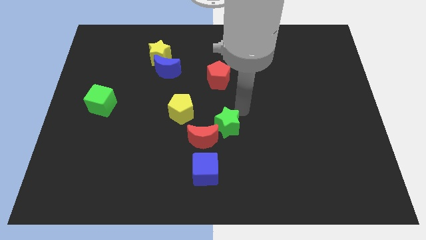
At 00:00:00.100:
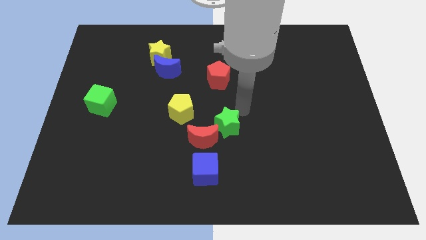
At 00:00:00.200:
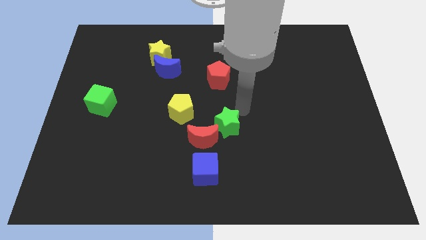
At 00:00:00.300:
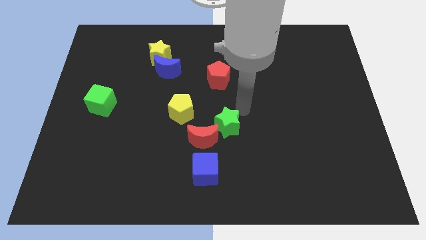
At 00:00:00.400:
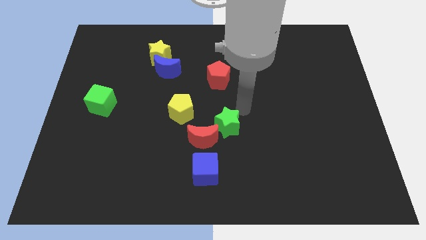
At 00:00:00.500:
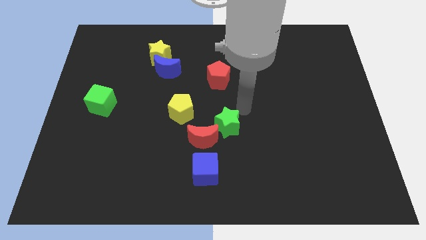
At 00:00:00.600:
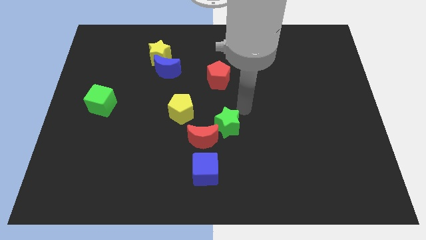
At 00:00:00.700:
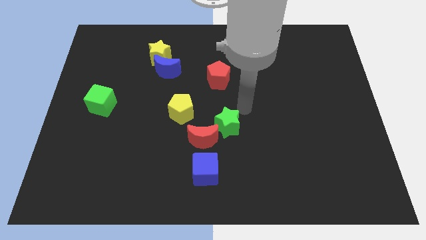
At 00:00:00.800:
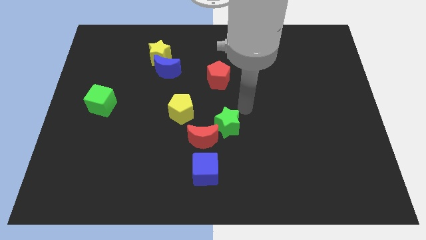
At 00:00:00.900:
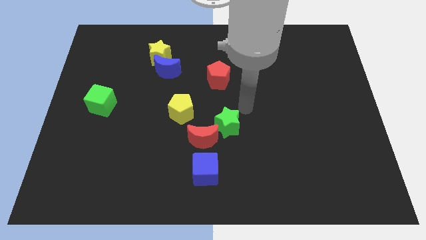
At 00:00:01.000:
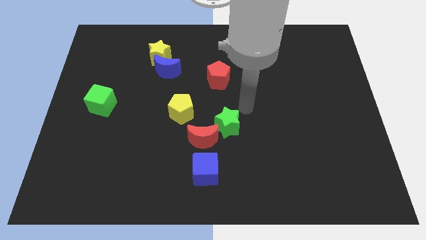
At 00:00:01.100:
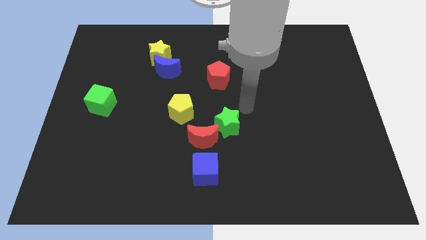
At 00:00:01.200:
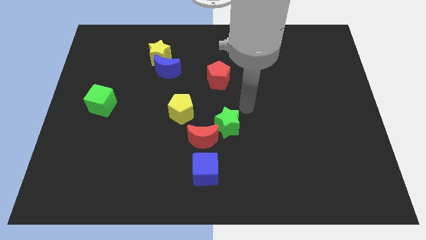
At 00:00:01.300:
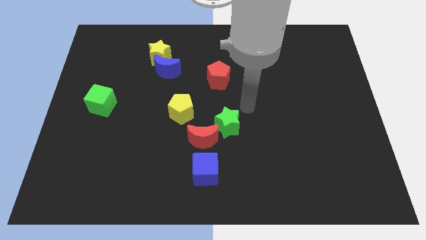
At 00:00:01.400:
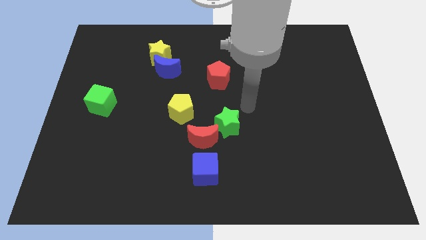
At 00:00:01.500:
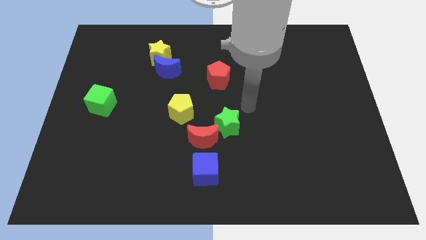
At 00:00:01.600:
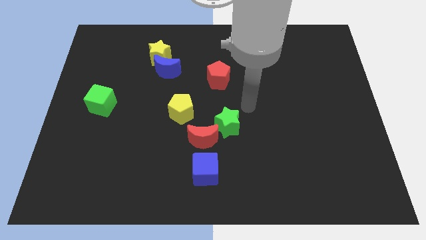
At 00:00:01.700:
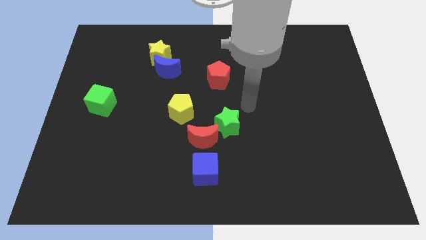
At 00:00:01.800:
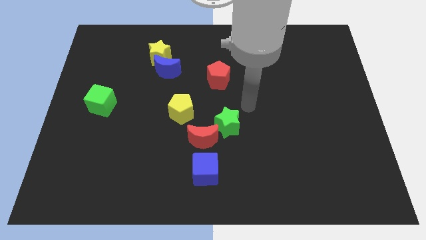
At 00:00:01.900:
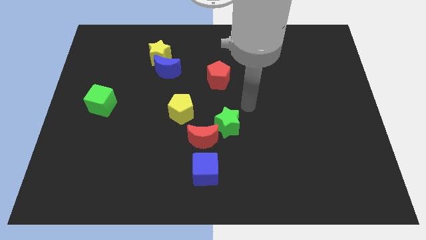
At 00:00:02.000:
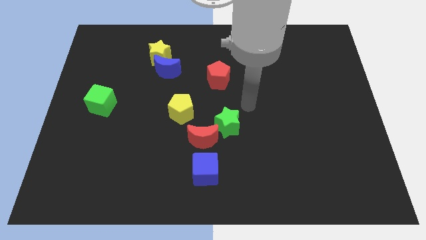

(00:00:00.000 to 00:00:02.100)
move your arm towards diagonal right of green star

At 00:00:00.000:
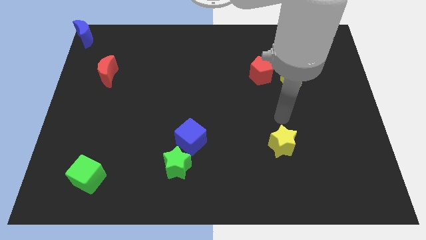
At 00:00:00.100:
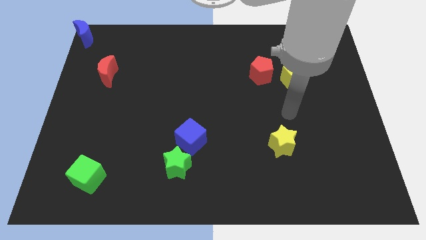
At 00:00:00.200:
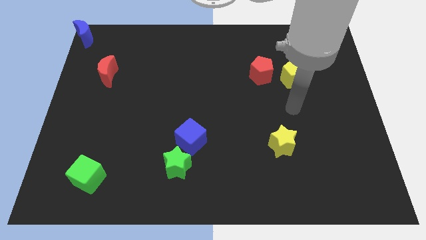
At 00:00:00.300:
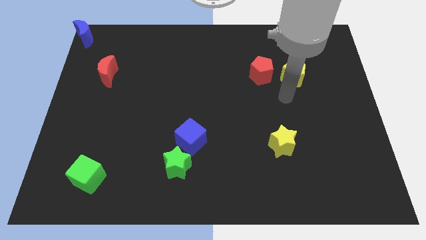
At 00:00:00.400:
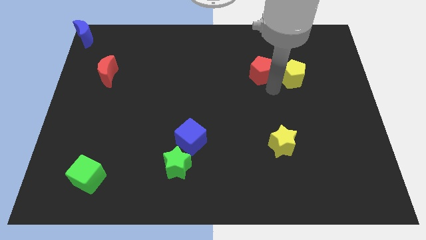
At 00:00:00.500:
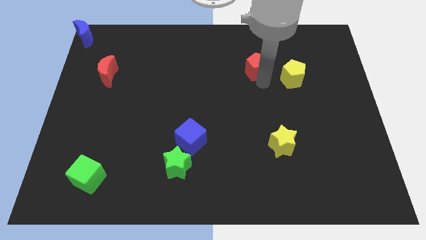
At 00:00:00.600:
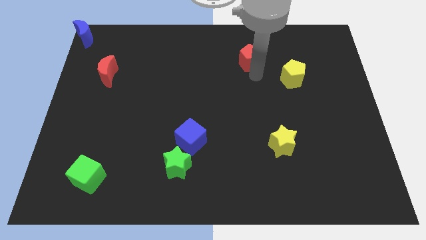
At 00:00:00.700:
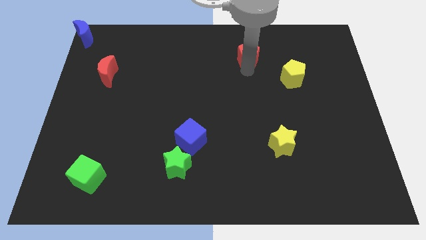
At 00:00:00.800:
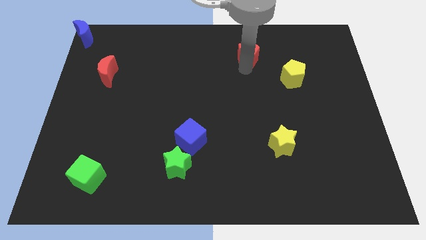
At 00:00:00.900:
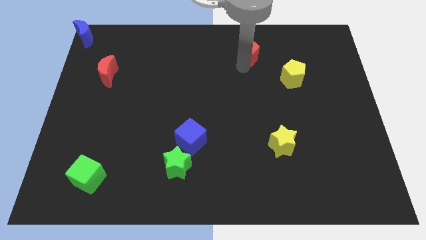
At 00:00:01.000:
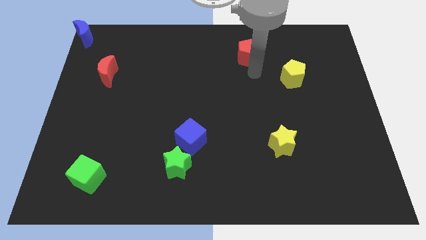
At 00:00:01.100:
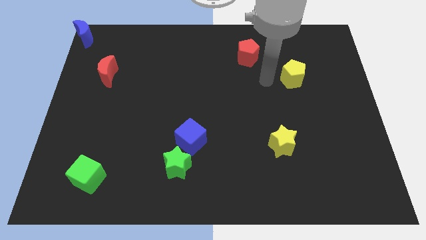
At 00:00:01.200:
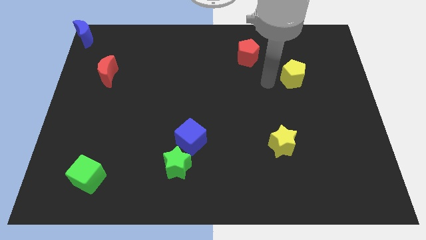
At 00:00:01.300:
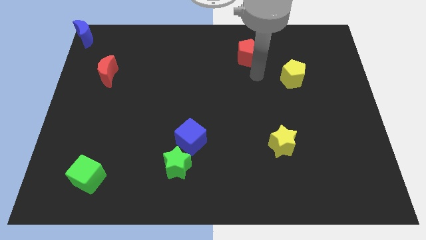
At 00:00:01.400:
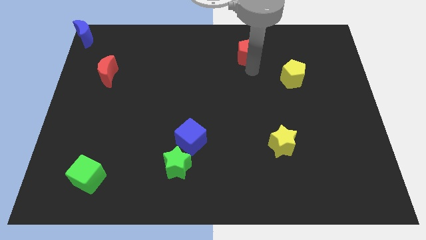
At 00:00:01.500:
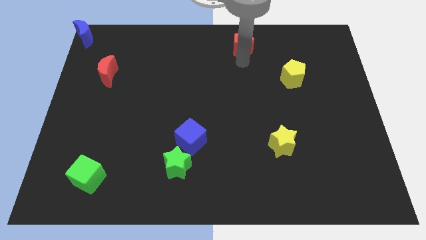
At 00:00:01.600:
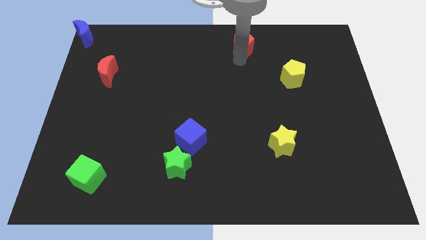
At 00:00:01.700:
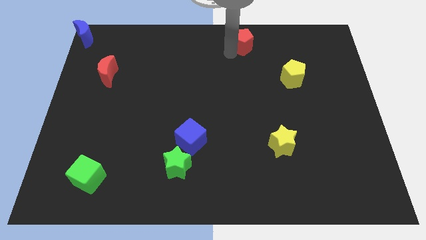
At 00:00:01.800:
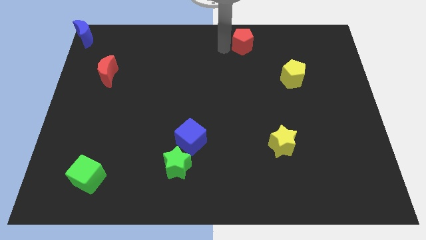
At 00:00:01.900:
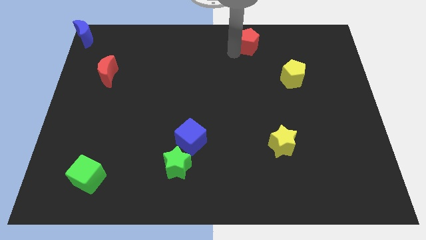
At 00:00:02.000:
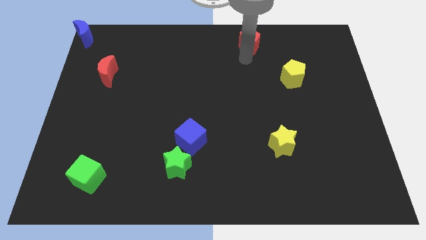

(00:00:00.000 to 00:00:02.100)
push the red pentagon upwards

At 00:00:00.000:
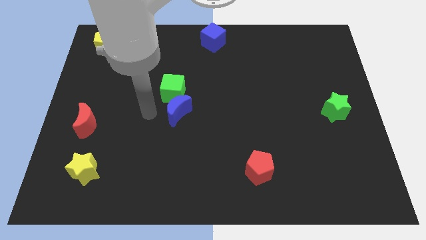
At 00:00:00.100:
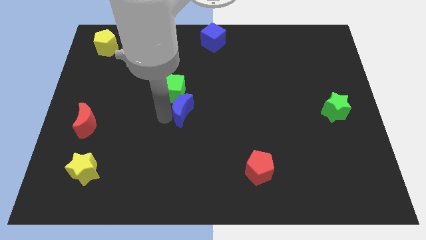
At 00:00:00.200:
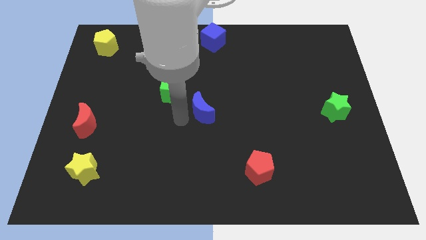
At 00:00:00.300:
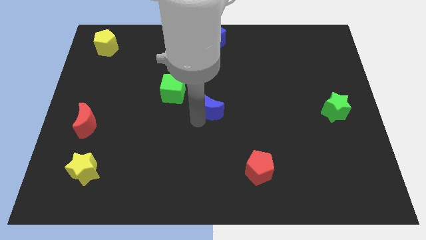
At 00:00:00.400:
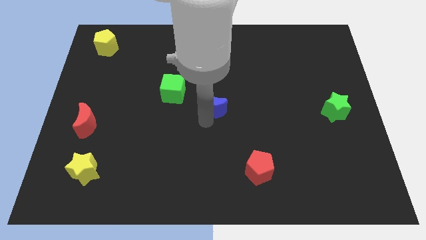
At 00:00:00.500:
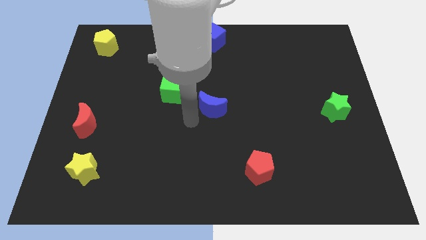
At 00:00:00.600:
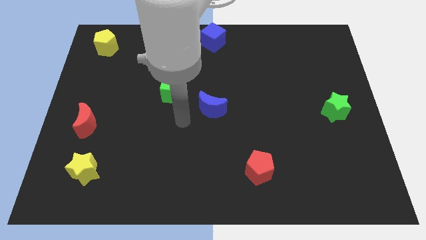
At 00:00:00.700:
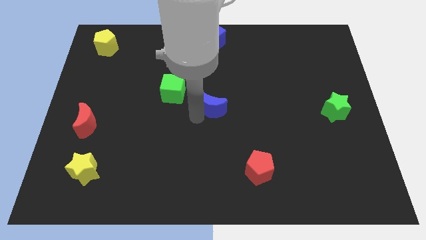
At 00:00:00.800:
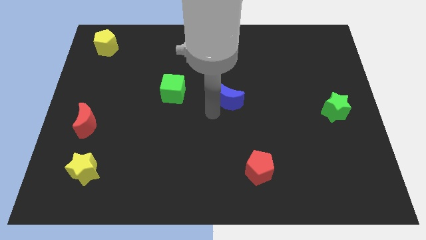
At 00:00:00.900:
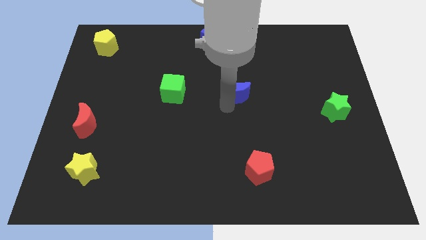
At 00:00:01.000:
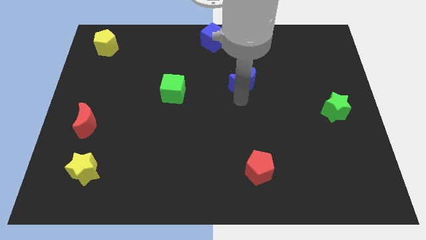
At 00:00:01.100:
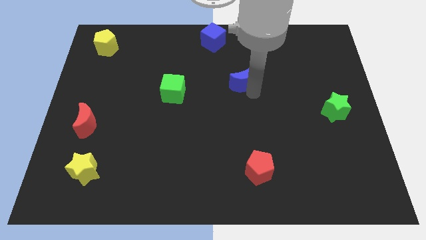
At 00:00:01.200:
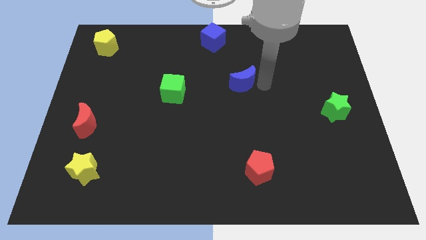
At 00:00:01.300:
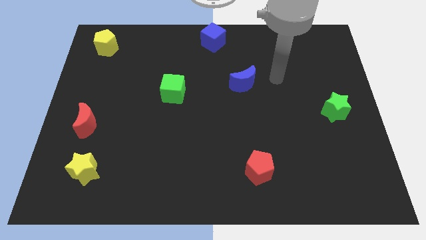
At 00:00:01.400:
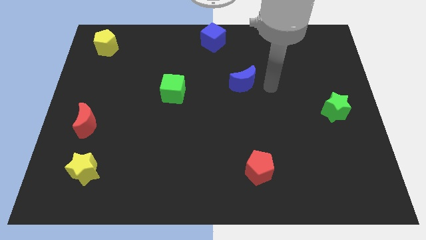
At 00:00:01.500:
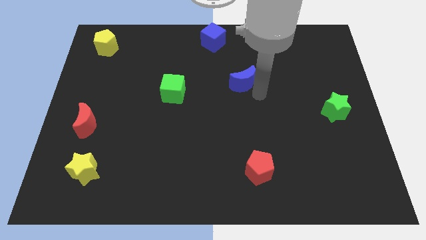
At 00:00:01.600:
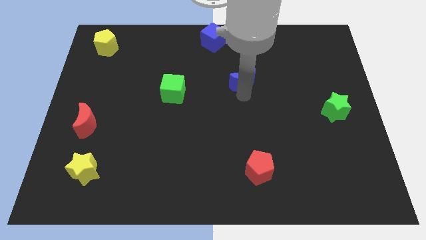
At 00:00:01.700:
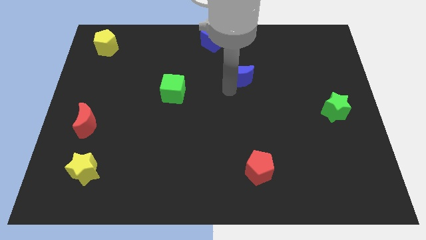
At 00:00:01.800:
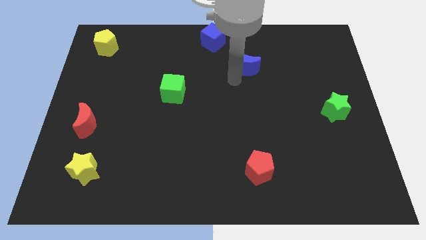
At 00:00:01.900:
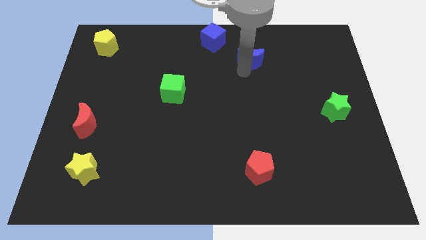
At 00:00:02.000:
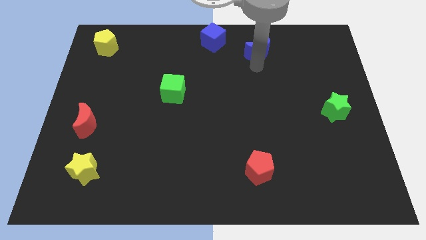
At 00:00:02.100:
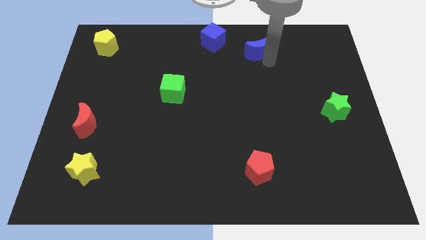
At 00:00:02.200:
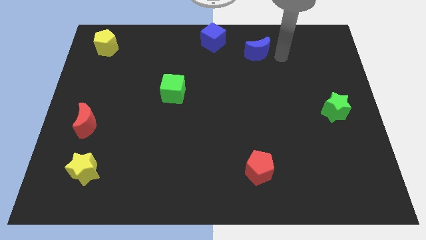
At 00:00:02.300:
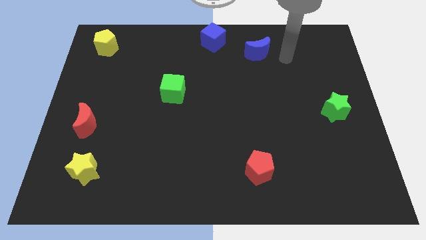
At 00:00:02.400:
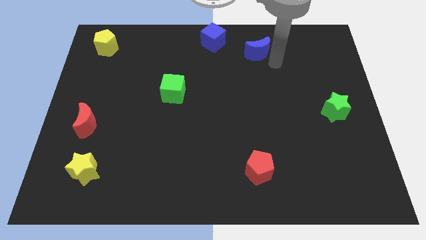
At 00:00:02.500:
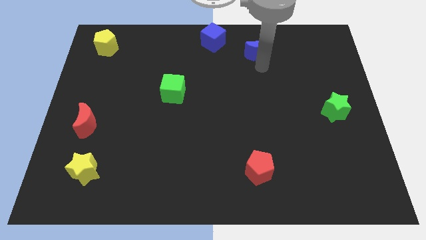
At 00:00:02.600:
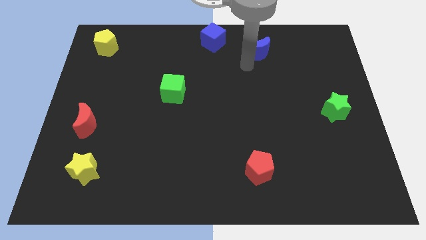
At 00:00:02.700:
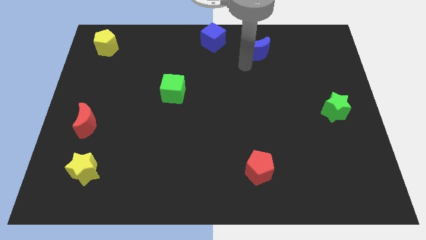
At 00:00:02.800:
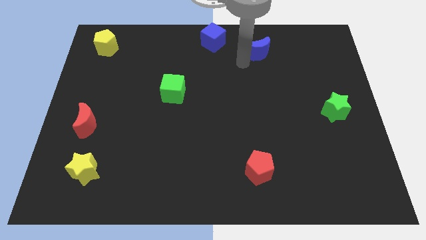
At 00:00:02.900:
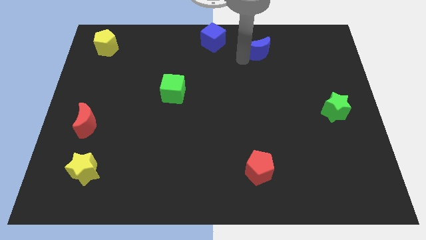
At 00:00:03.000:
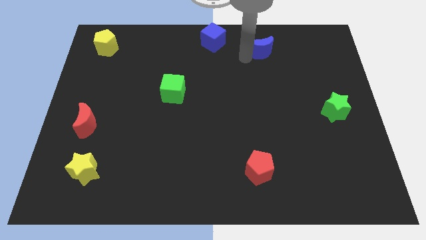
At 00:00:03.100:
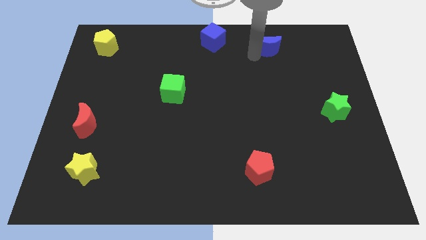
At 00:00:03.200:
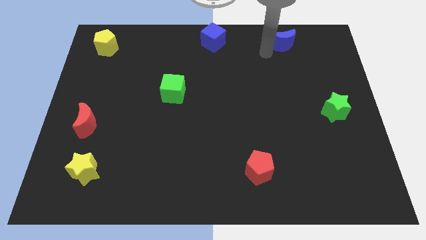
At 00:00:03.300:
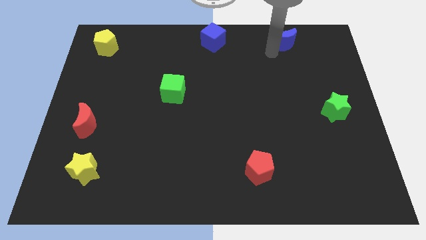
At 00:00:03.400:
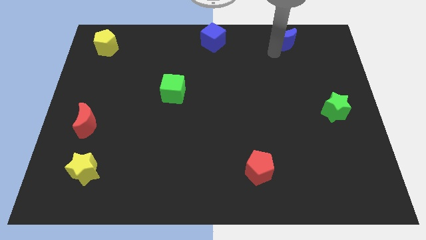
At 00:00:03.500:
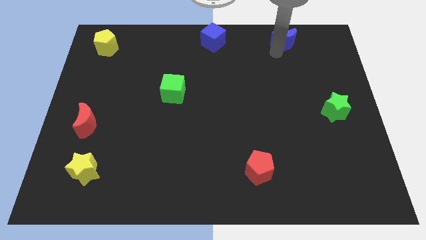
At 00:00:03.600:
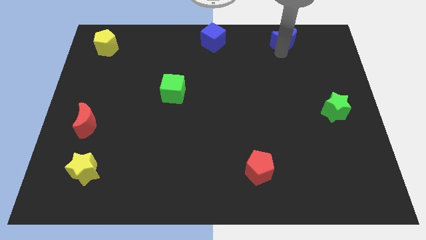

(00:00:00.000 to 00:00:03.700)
move blue moon to the top right side of the board

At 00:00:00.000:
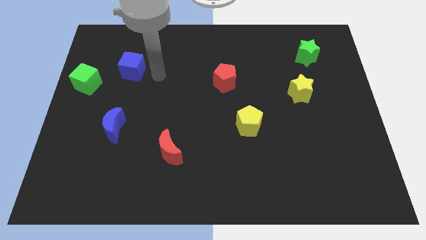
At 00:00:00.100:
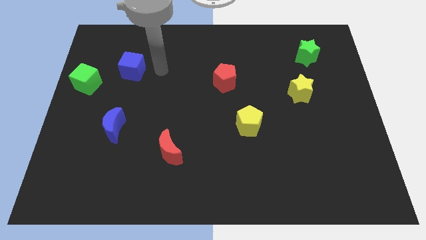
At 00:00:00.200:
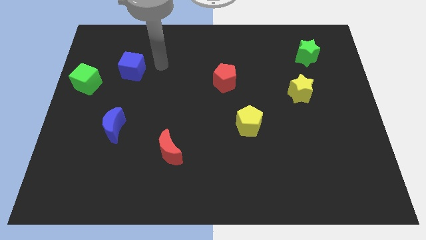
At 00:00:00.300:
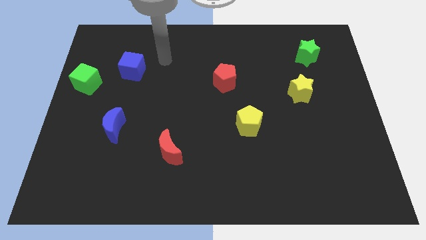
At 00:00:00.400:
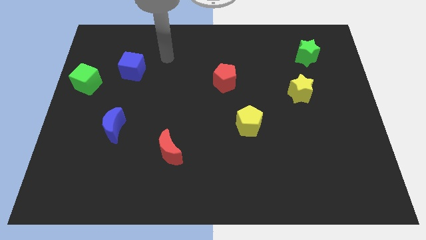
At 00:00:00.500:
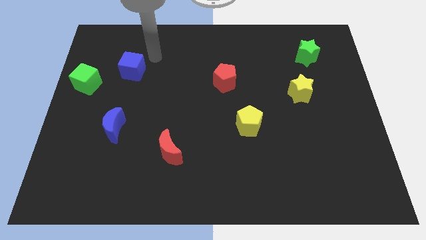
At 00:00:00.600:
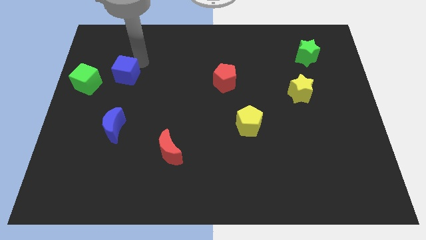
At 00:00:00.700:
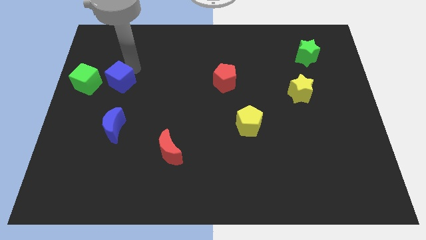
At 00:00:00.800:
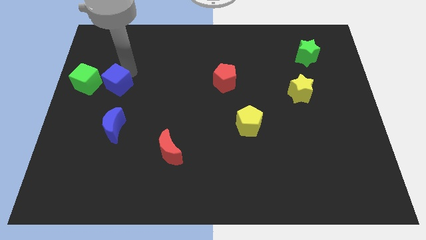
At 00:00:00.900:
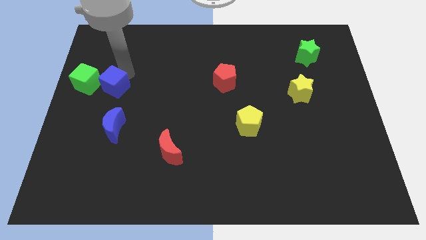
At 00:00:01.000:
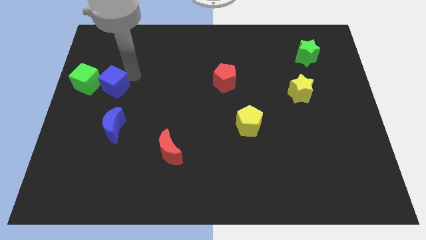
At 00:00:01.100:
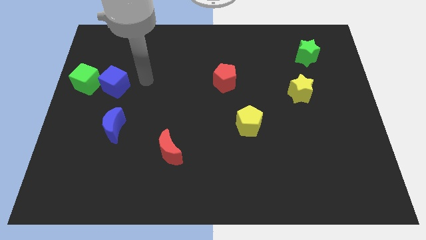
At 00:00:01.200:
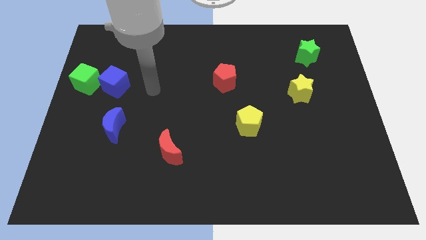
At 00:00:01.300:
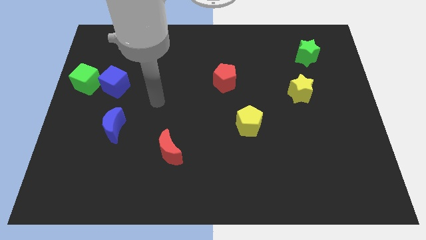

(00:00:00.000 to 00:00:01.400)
move the blue cube to the right of the green star
